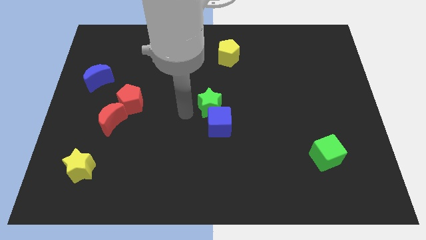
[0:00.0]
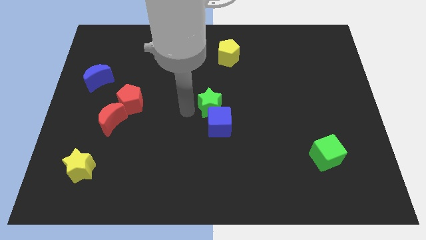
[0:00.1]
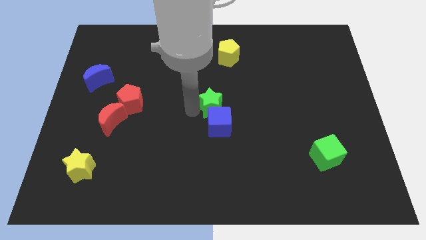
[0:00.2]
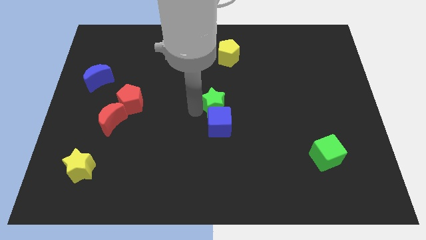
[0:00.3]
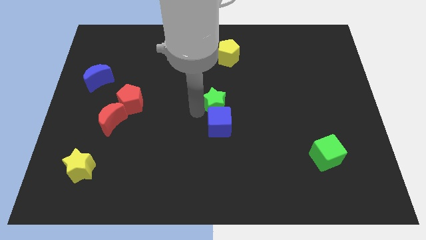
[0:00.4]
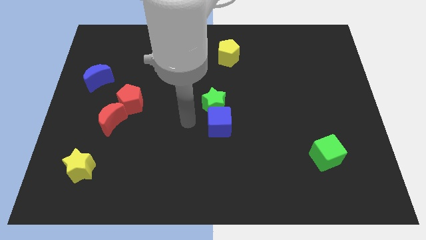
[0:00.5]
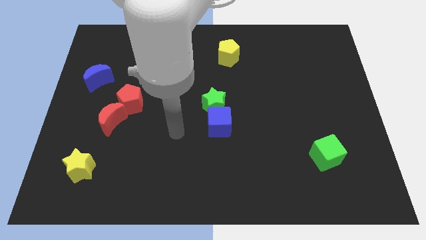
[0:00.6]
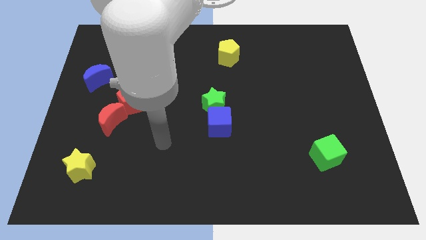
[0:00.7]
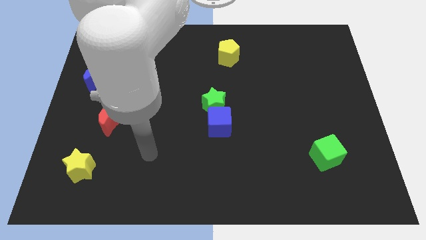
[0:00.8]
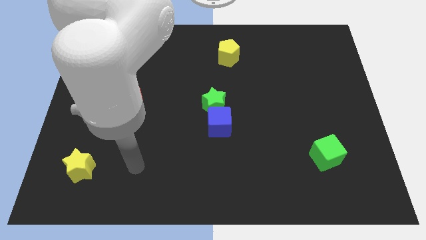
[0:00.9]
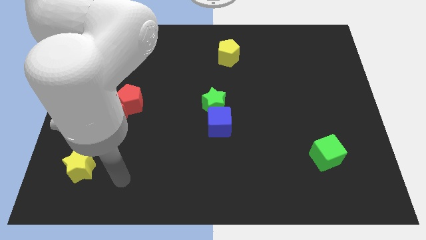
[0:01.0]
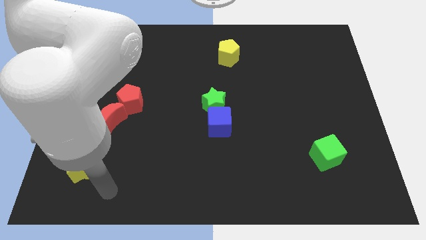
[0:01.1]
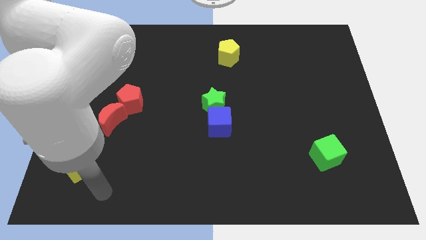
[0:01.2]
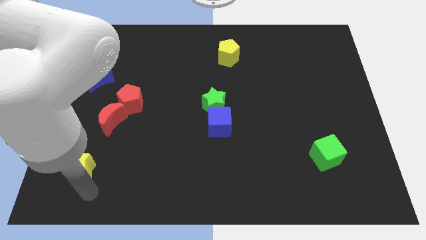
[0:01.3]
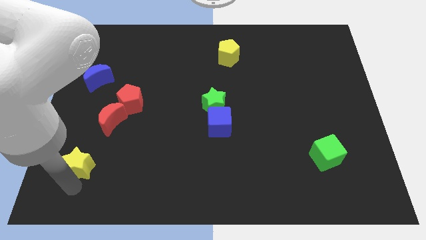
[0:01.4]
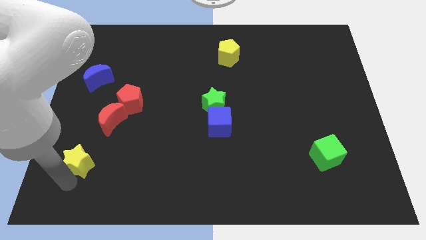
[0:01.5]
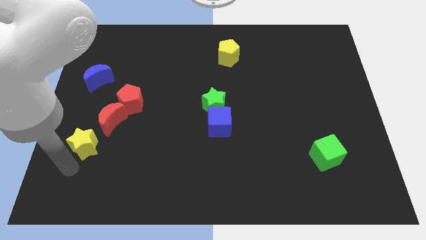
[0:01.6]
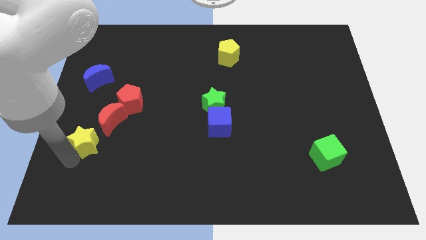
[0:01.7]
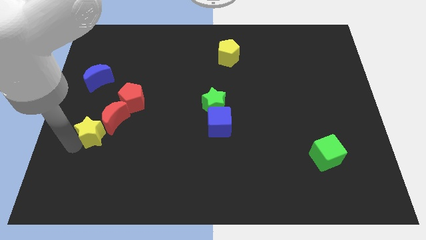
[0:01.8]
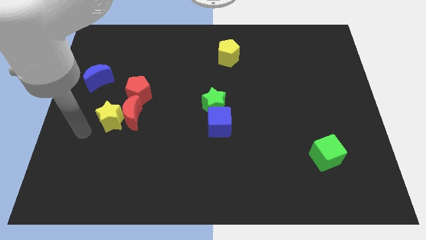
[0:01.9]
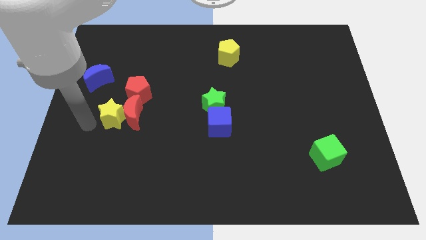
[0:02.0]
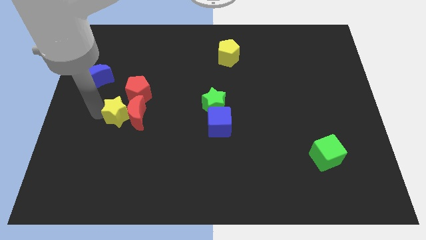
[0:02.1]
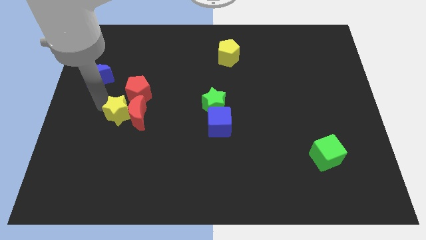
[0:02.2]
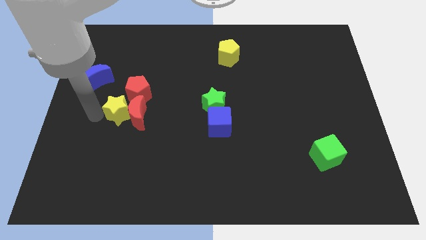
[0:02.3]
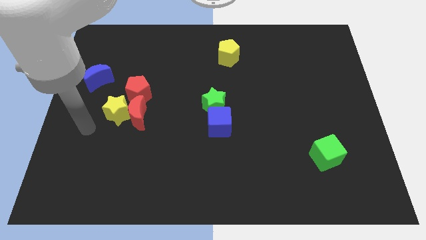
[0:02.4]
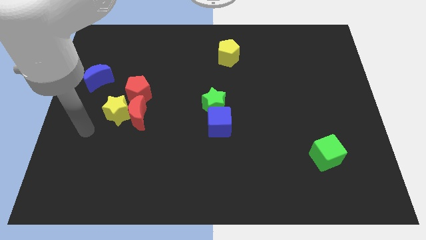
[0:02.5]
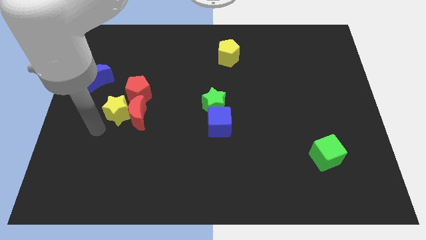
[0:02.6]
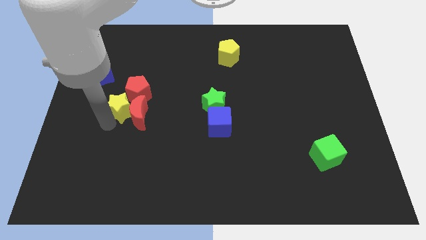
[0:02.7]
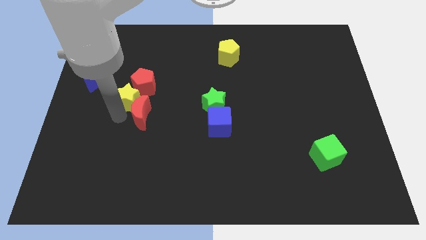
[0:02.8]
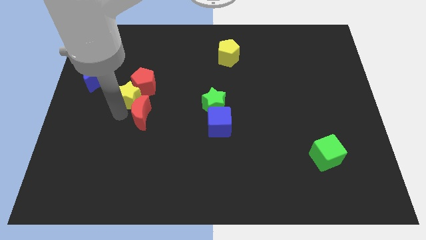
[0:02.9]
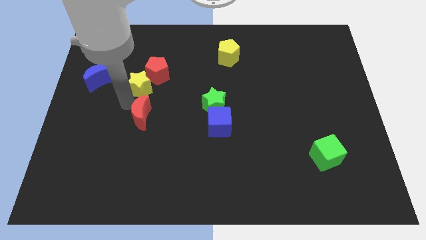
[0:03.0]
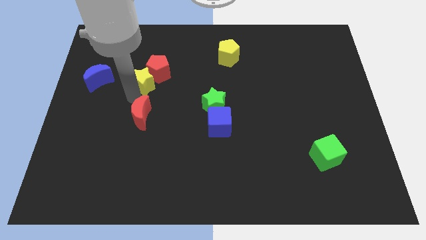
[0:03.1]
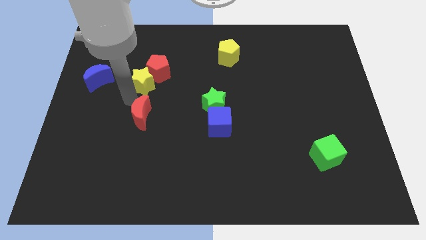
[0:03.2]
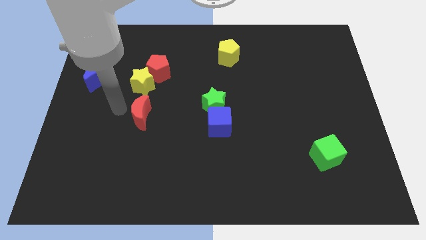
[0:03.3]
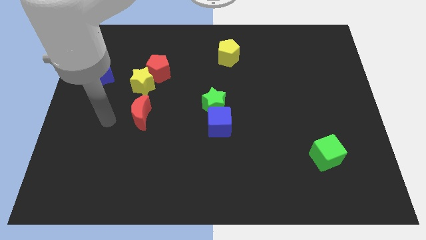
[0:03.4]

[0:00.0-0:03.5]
push the yellow star towards the red crescent

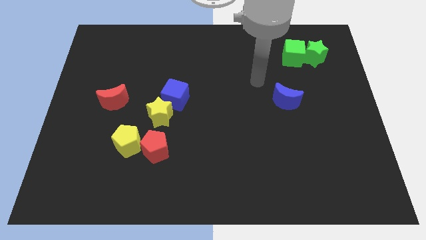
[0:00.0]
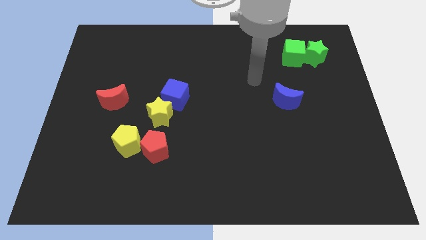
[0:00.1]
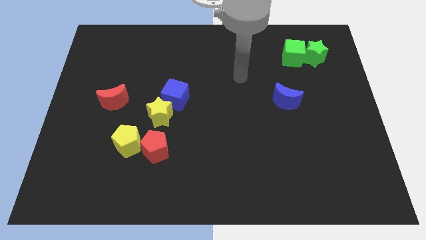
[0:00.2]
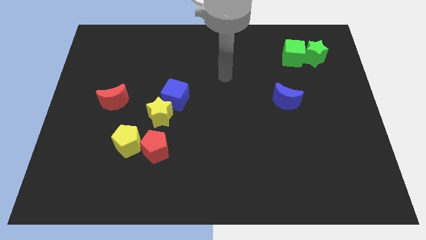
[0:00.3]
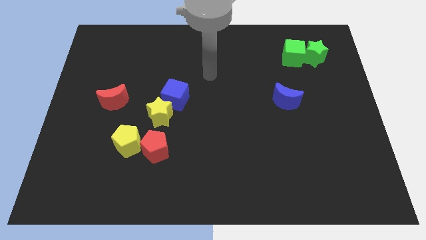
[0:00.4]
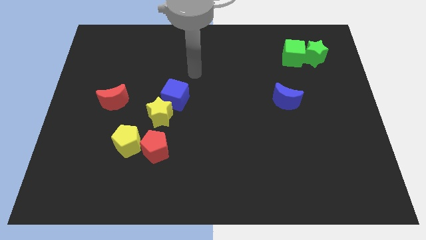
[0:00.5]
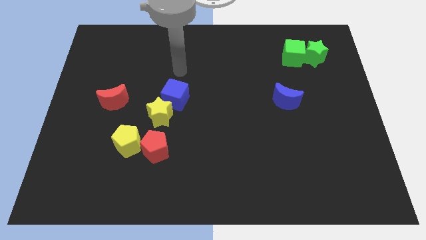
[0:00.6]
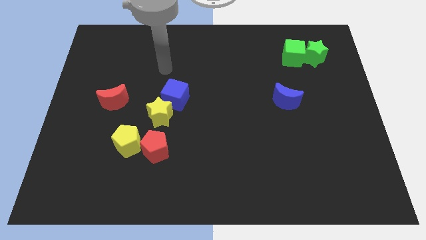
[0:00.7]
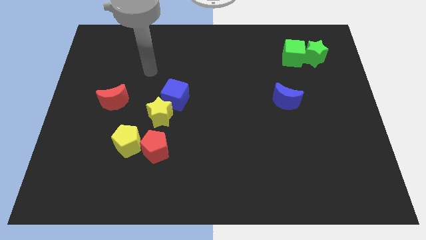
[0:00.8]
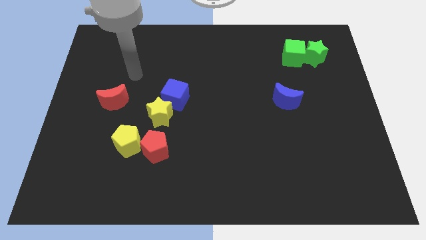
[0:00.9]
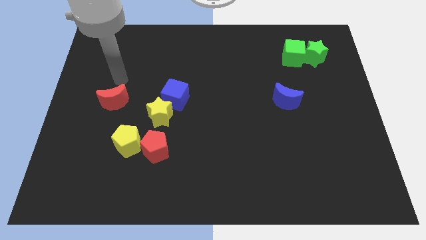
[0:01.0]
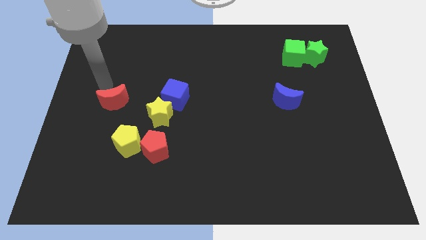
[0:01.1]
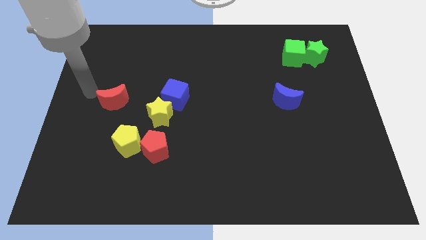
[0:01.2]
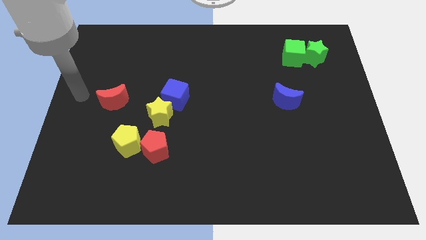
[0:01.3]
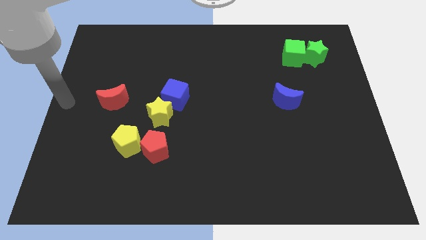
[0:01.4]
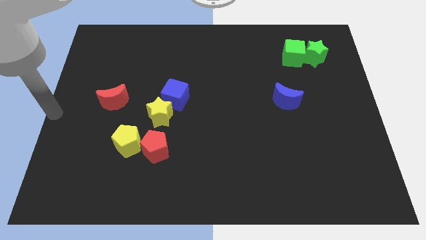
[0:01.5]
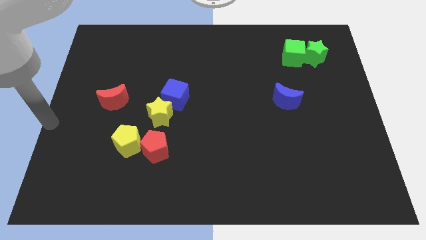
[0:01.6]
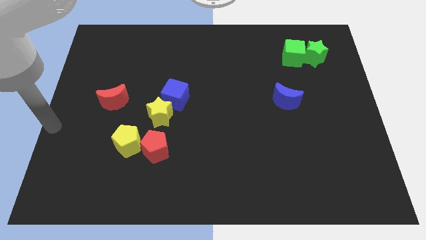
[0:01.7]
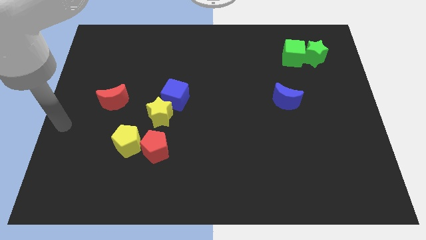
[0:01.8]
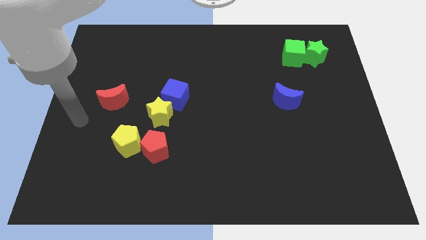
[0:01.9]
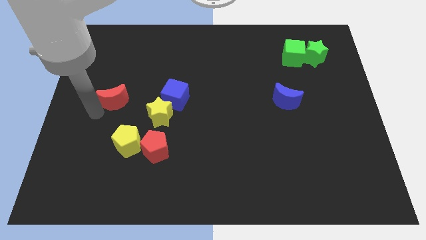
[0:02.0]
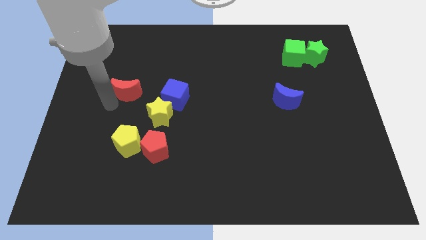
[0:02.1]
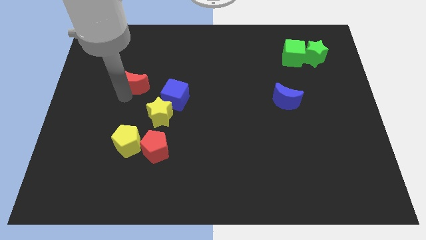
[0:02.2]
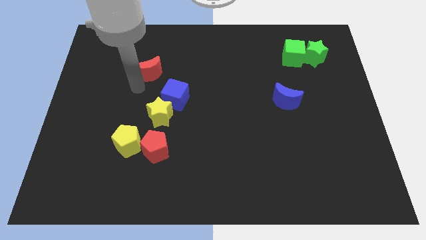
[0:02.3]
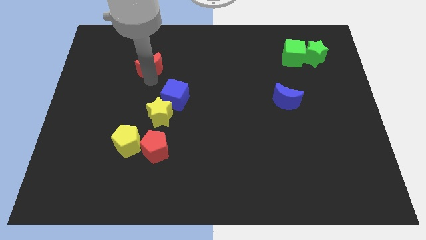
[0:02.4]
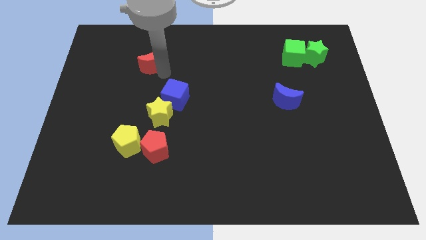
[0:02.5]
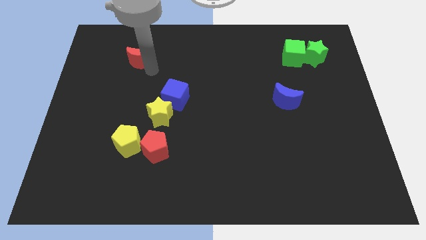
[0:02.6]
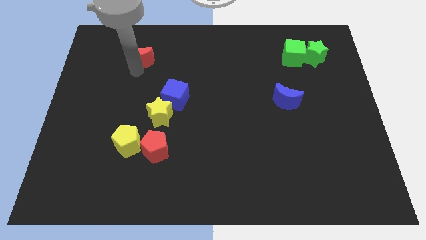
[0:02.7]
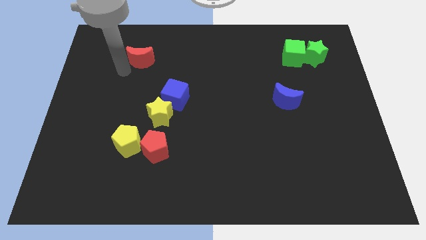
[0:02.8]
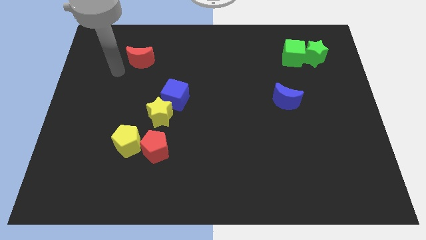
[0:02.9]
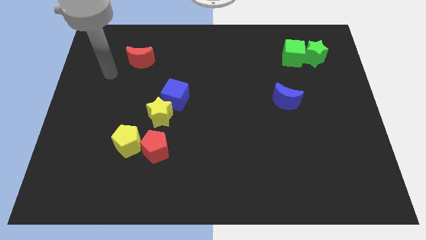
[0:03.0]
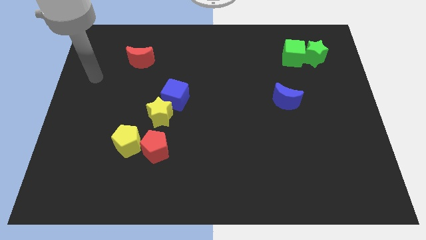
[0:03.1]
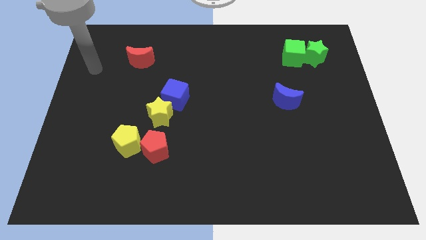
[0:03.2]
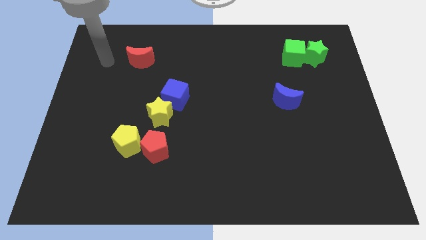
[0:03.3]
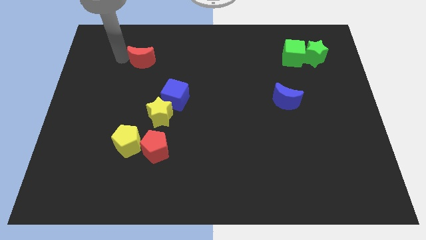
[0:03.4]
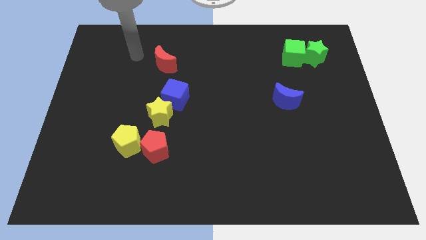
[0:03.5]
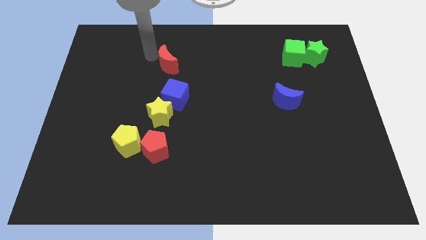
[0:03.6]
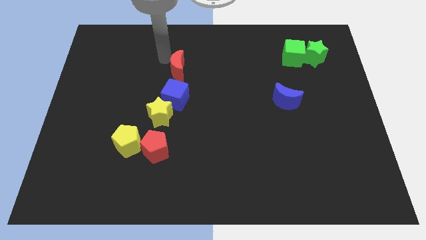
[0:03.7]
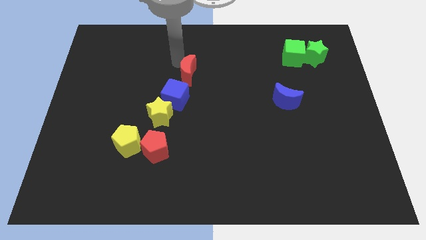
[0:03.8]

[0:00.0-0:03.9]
push the red crescent above the blue cube

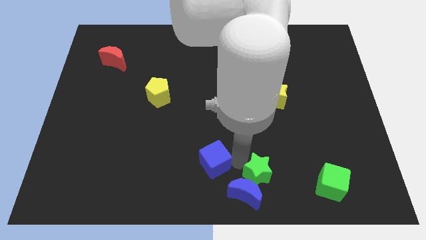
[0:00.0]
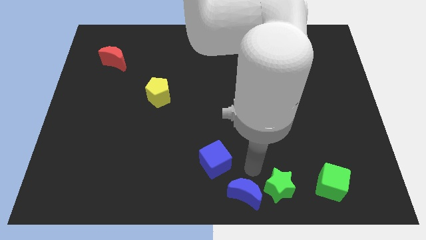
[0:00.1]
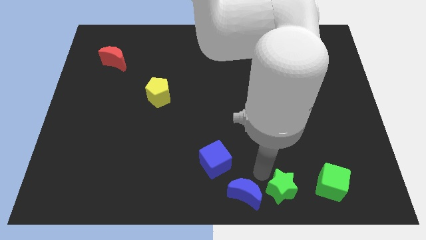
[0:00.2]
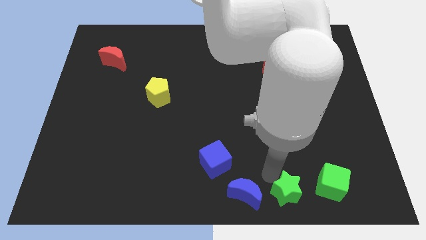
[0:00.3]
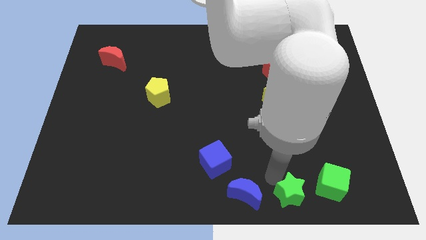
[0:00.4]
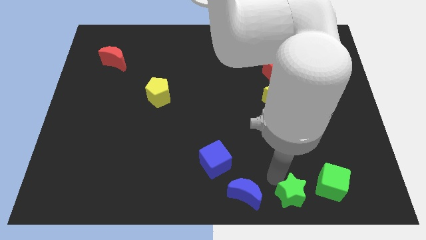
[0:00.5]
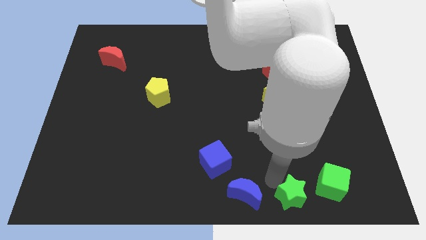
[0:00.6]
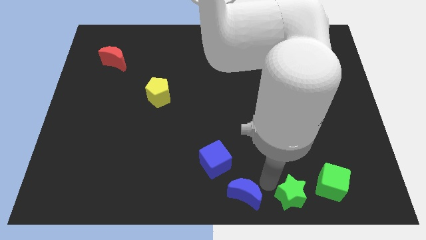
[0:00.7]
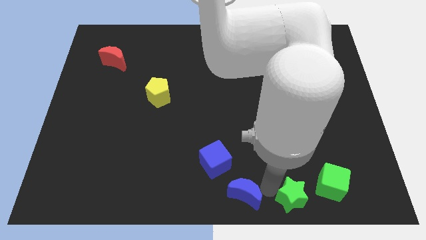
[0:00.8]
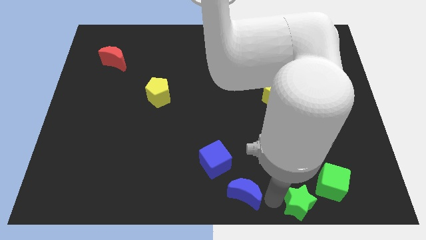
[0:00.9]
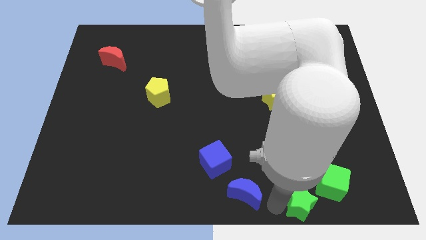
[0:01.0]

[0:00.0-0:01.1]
move the green star in between to the green cube and blue crescent

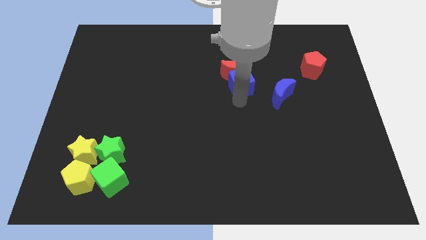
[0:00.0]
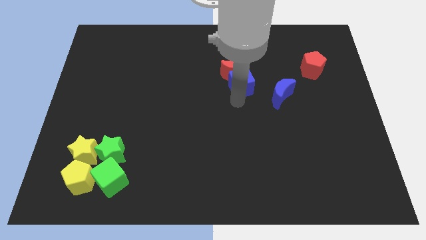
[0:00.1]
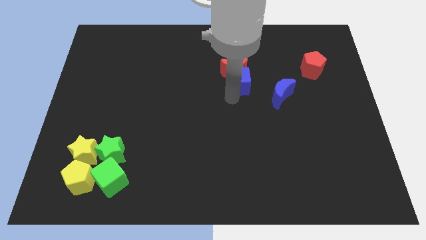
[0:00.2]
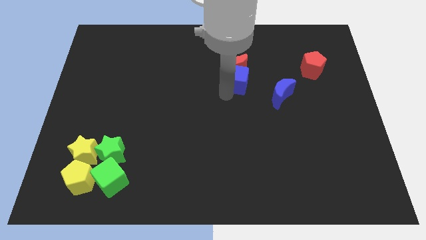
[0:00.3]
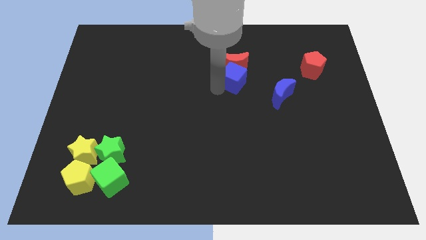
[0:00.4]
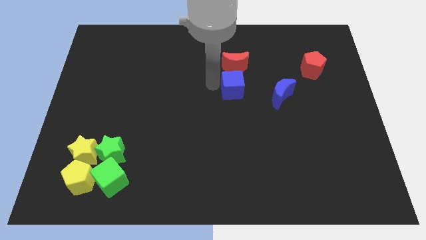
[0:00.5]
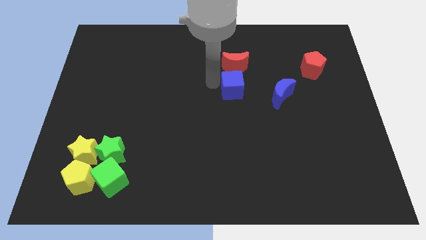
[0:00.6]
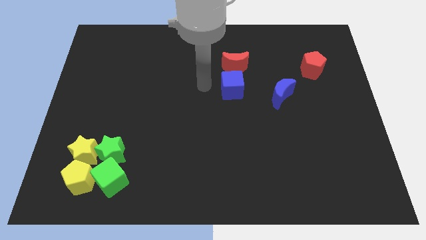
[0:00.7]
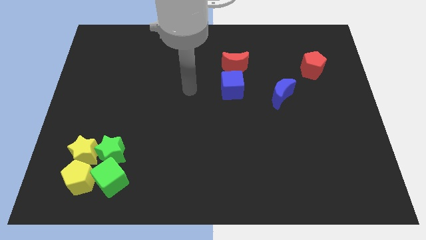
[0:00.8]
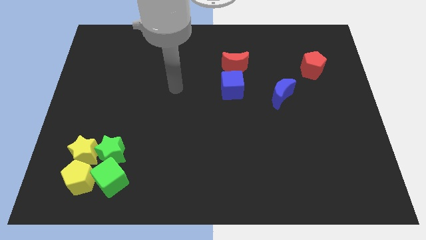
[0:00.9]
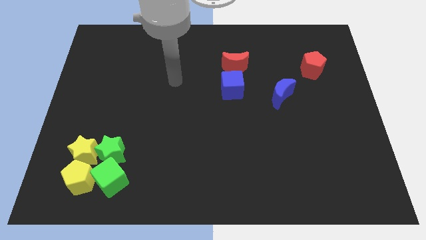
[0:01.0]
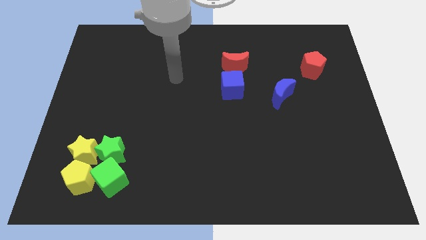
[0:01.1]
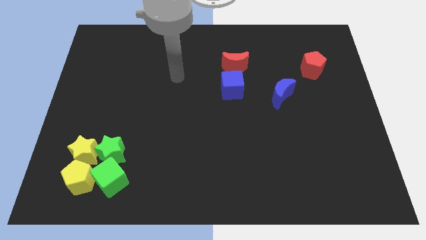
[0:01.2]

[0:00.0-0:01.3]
move yourself away from the blue cube
